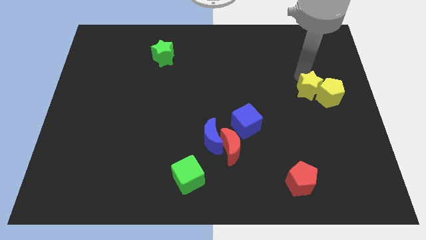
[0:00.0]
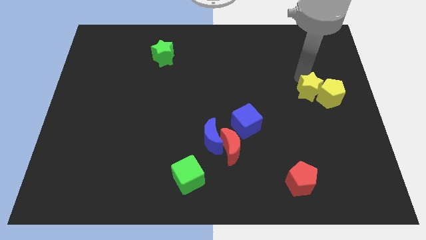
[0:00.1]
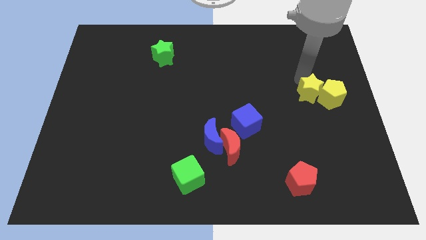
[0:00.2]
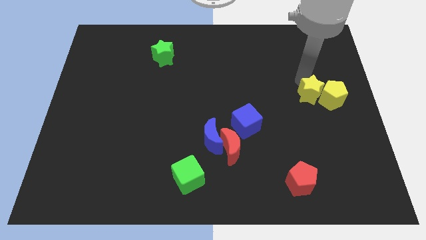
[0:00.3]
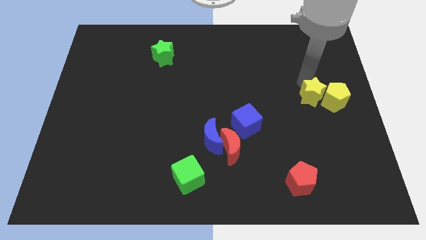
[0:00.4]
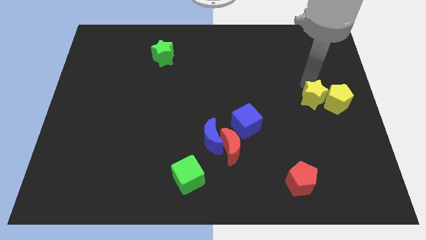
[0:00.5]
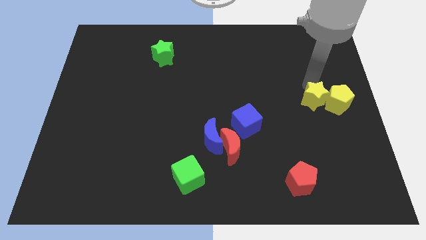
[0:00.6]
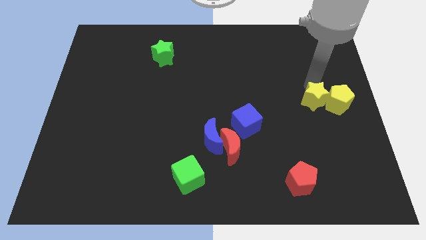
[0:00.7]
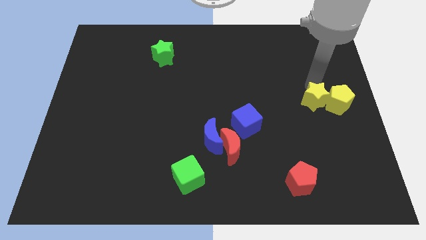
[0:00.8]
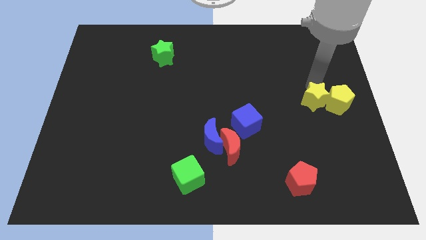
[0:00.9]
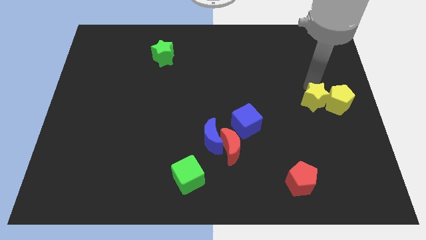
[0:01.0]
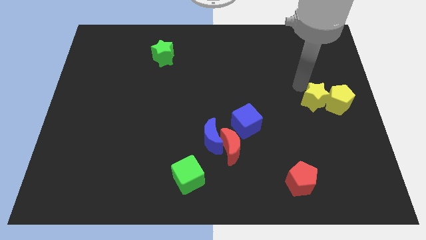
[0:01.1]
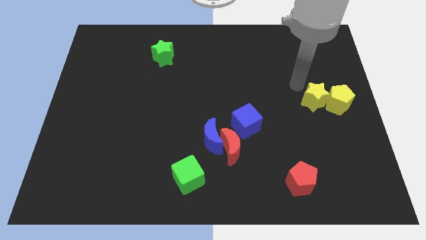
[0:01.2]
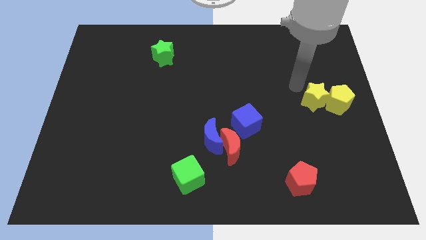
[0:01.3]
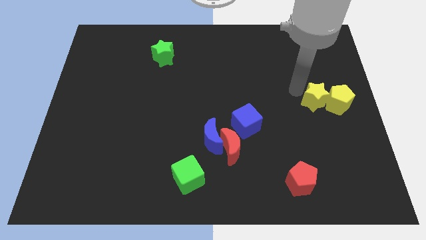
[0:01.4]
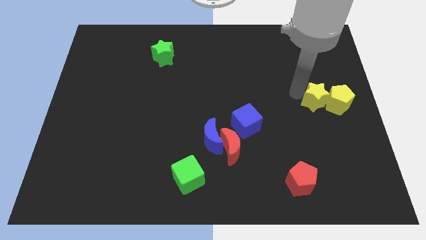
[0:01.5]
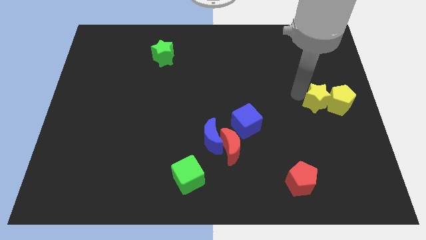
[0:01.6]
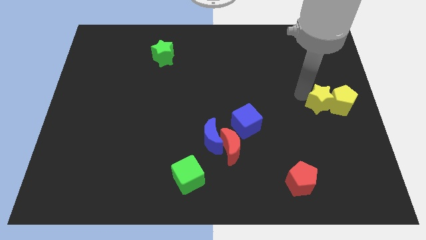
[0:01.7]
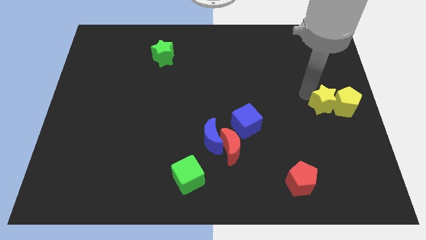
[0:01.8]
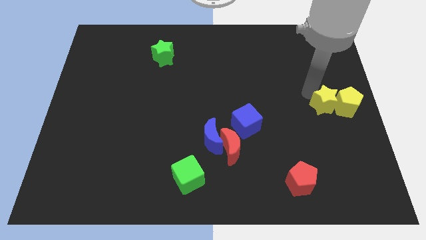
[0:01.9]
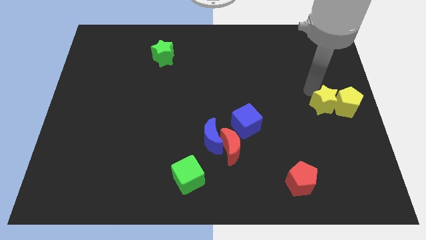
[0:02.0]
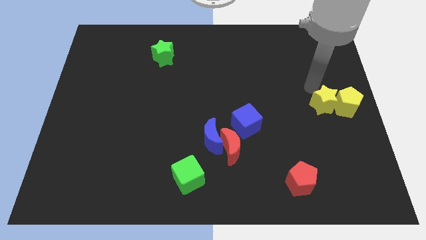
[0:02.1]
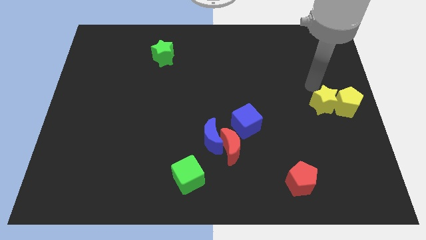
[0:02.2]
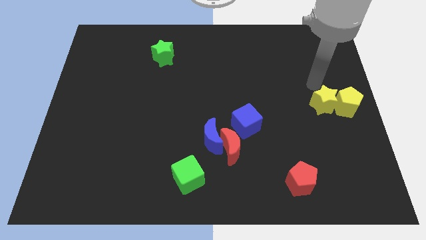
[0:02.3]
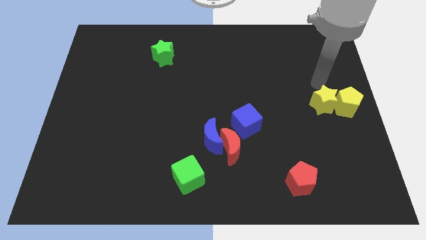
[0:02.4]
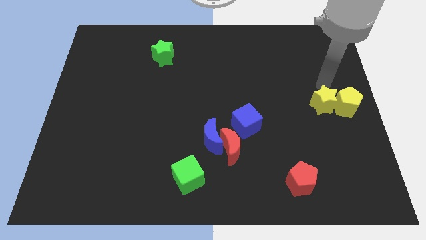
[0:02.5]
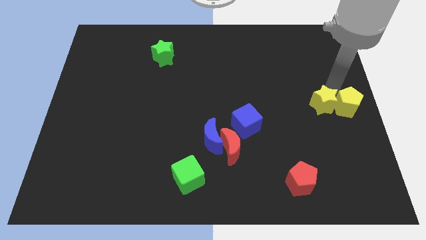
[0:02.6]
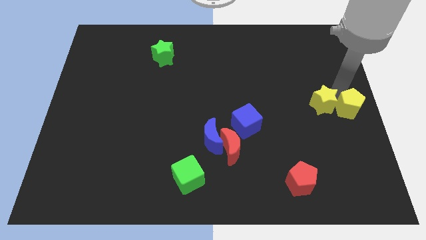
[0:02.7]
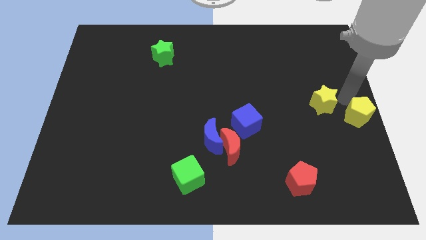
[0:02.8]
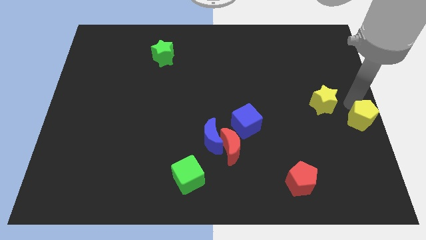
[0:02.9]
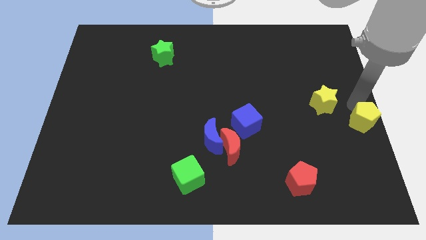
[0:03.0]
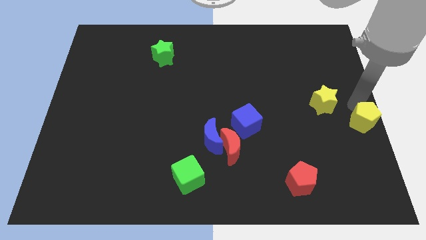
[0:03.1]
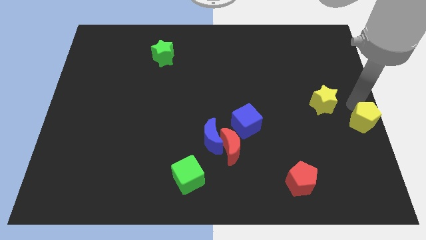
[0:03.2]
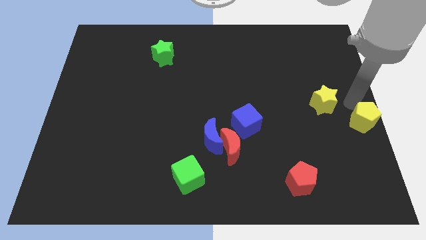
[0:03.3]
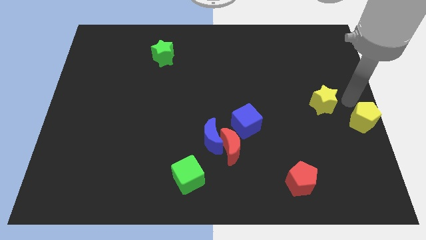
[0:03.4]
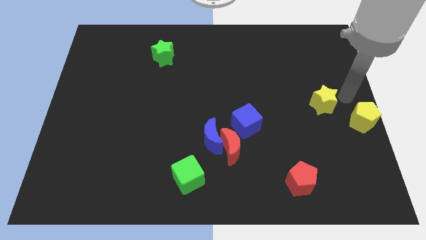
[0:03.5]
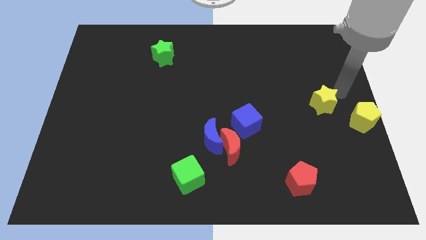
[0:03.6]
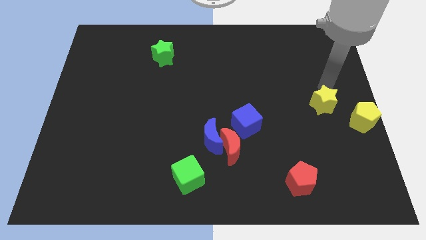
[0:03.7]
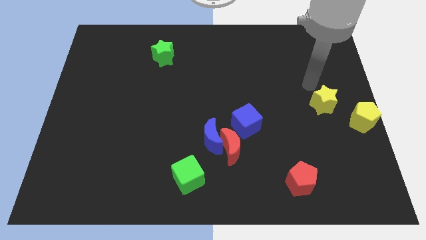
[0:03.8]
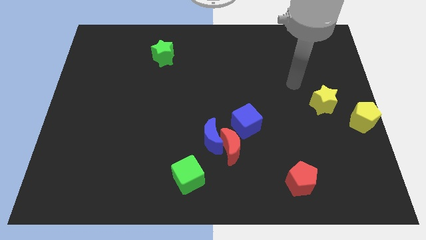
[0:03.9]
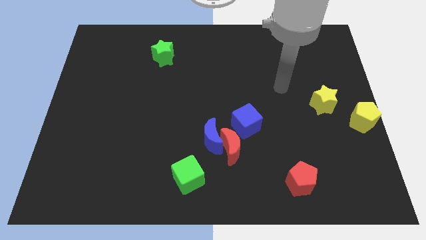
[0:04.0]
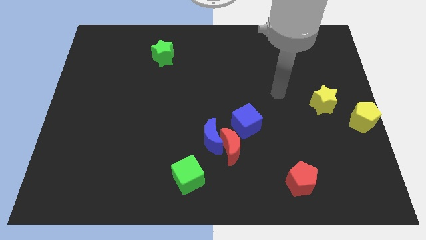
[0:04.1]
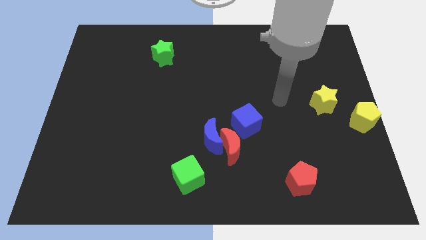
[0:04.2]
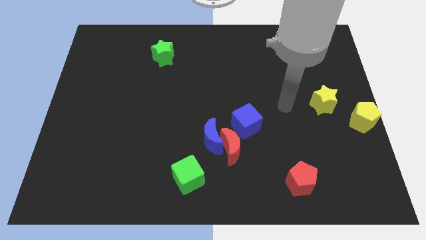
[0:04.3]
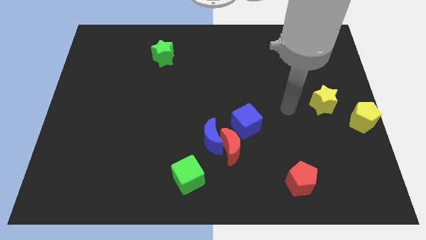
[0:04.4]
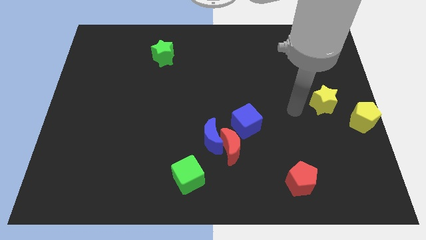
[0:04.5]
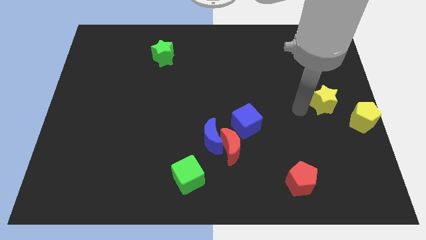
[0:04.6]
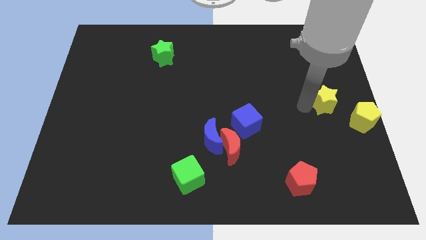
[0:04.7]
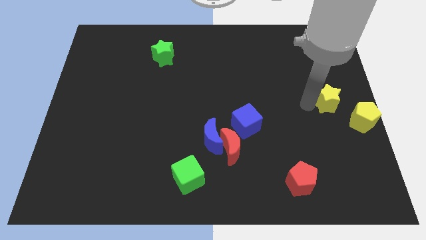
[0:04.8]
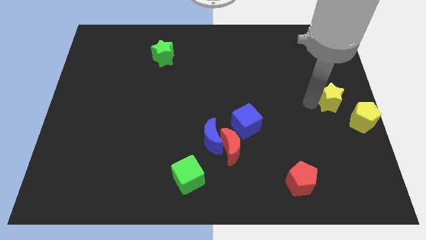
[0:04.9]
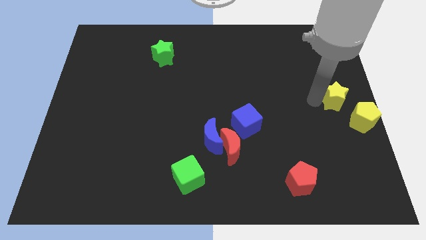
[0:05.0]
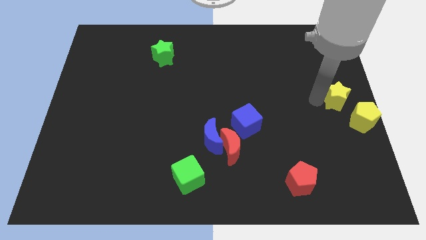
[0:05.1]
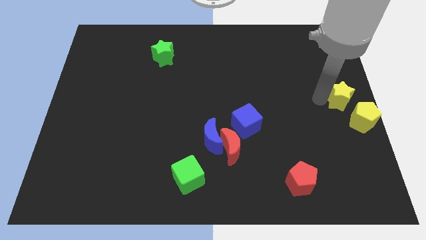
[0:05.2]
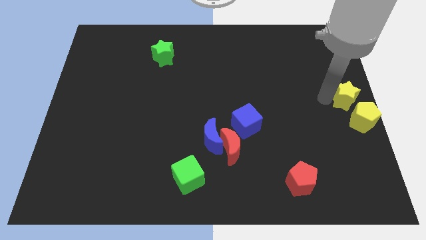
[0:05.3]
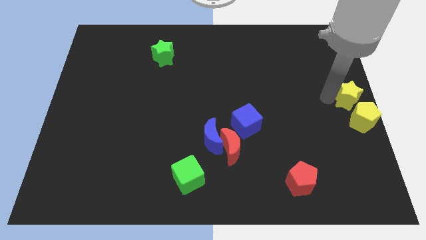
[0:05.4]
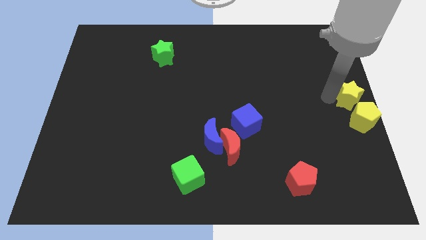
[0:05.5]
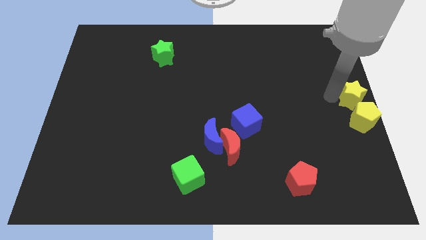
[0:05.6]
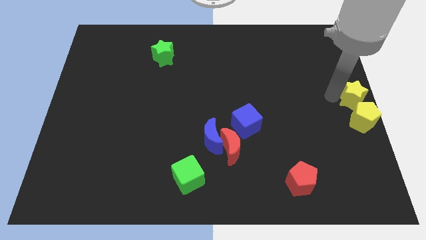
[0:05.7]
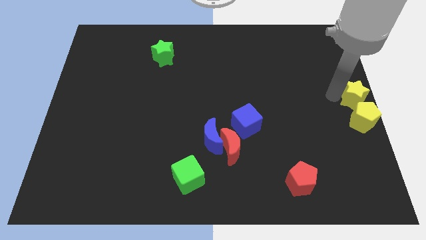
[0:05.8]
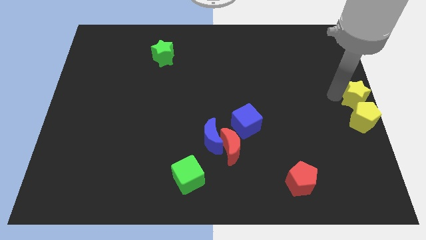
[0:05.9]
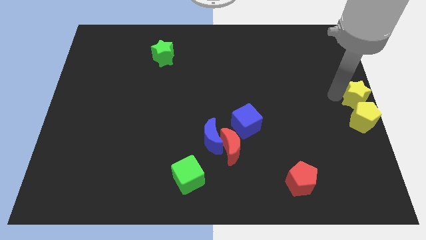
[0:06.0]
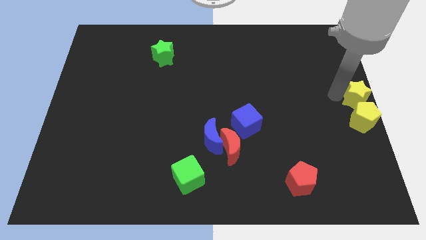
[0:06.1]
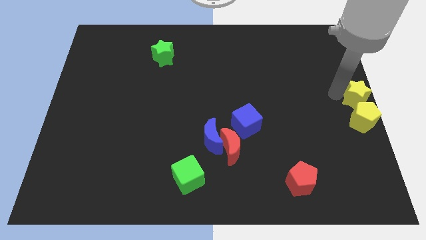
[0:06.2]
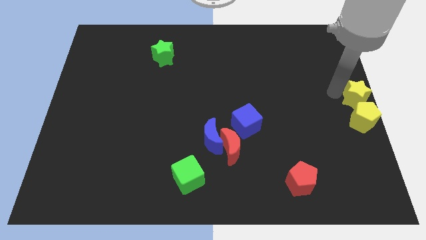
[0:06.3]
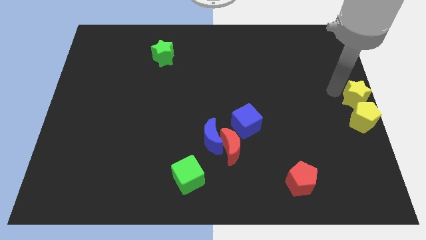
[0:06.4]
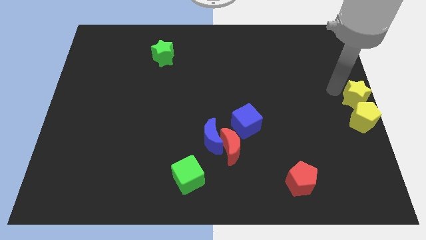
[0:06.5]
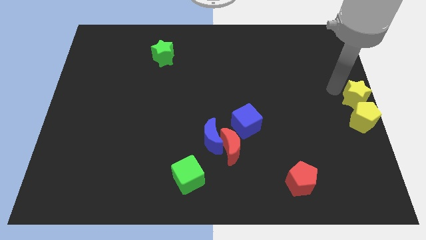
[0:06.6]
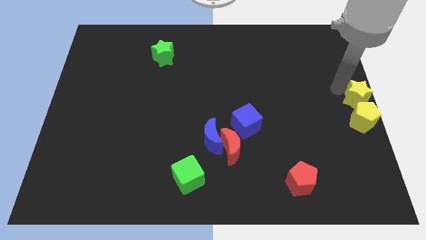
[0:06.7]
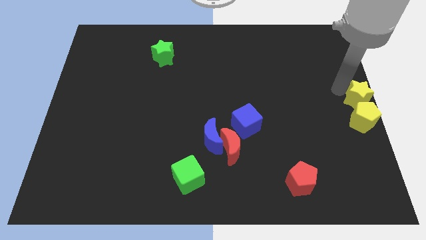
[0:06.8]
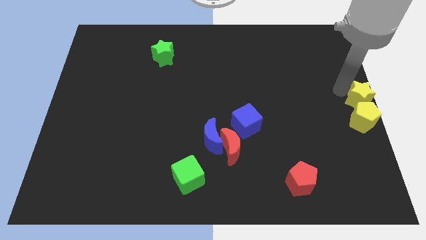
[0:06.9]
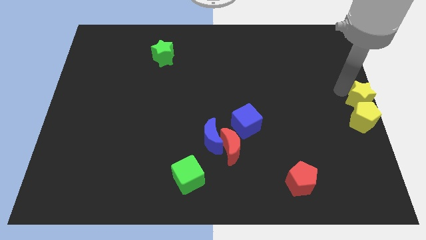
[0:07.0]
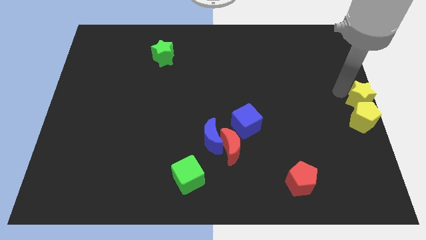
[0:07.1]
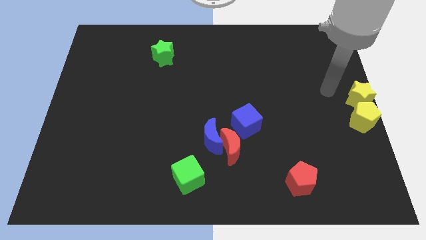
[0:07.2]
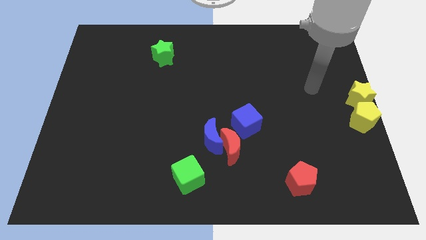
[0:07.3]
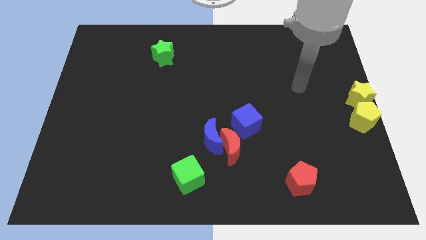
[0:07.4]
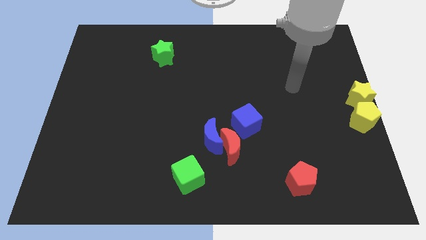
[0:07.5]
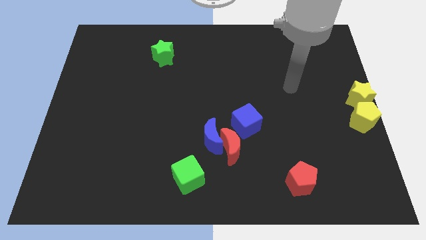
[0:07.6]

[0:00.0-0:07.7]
move the yellow blocks to the center right of the blocks

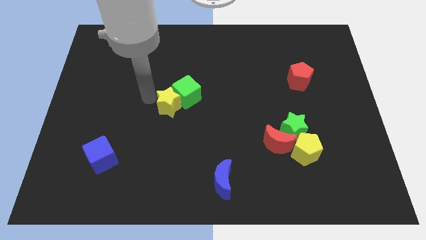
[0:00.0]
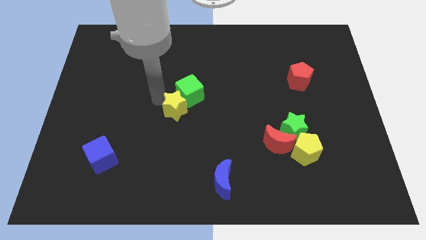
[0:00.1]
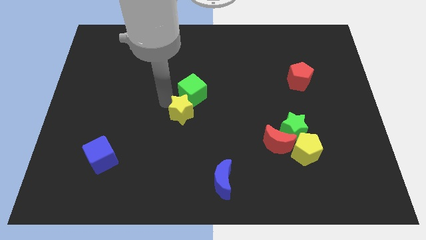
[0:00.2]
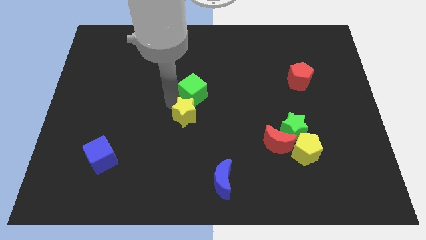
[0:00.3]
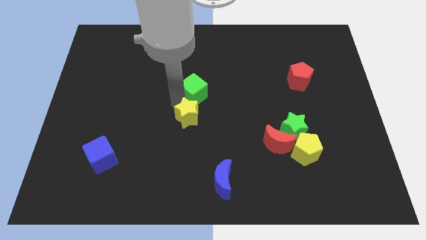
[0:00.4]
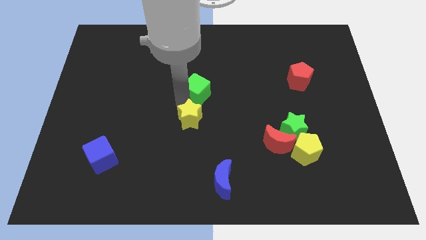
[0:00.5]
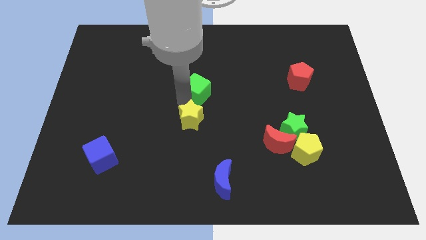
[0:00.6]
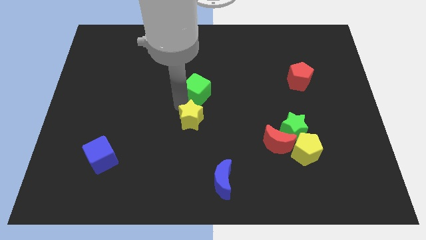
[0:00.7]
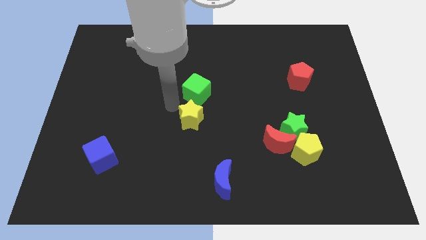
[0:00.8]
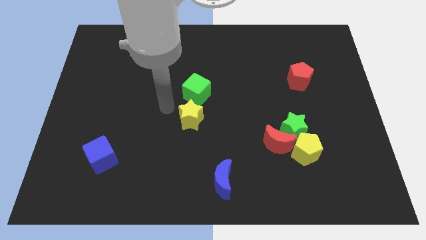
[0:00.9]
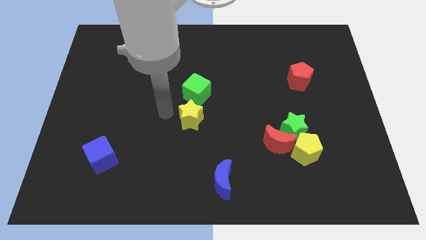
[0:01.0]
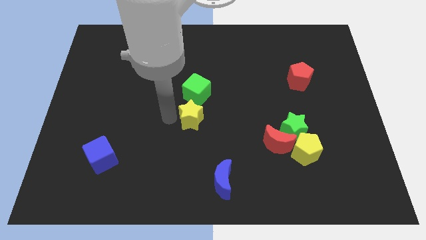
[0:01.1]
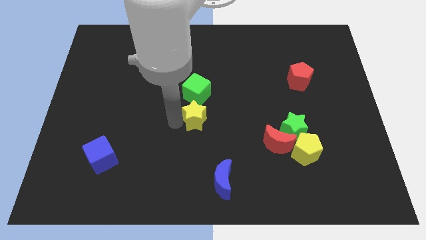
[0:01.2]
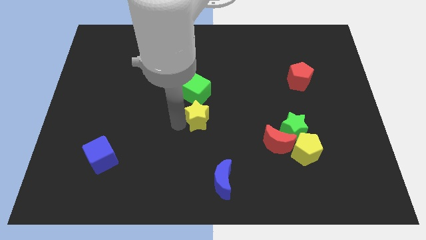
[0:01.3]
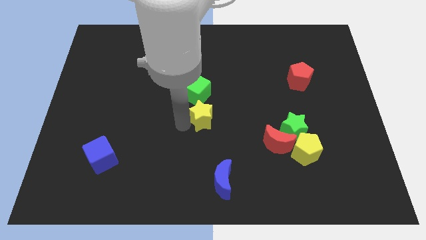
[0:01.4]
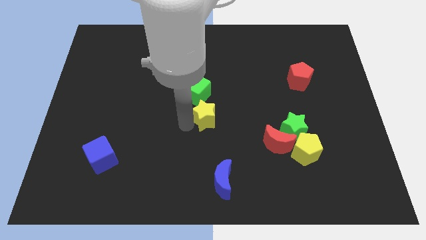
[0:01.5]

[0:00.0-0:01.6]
place the yellow star below the green cube
